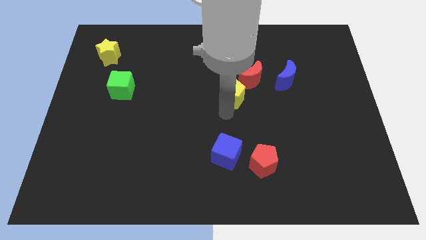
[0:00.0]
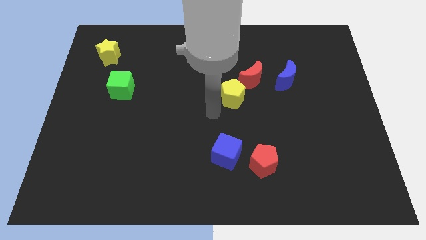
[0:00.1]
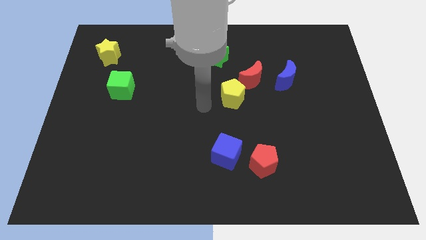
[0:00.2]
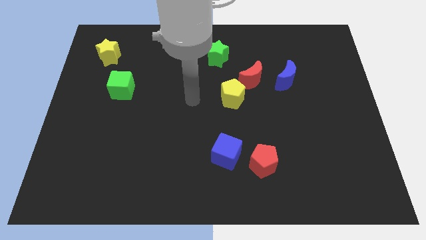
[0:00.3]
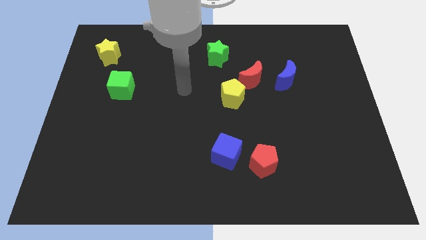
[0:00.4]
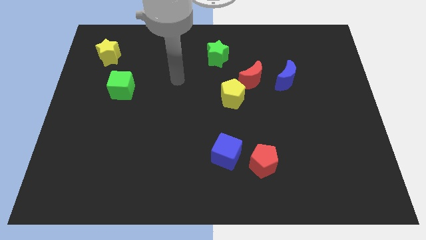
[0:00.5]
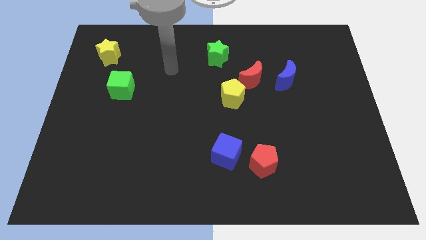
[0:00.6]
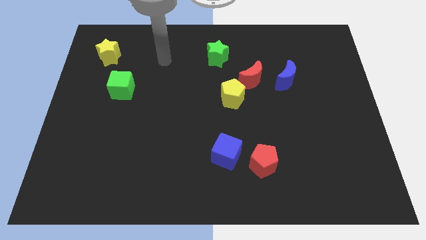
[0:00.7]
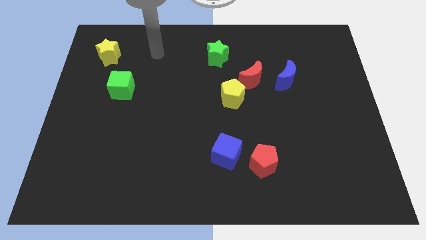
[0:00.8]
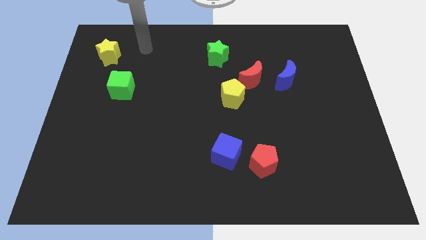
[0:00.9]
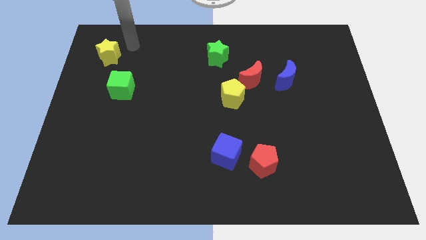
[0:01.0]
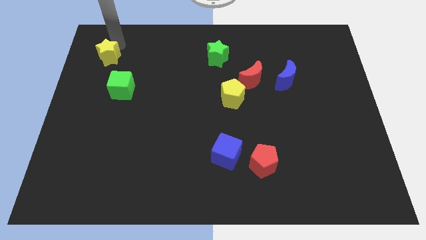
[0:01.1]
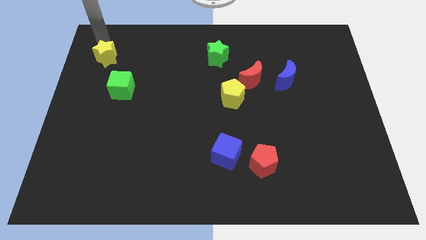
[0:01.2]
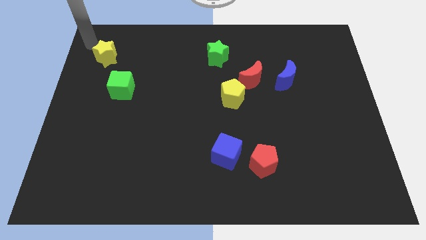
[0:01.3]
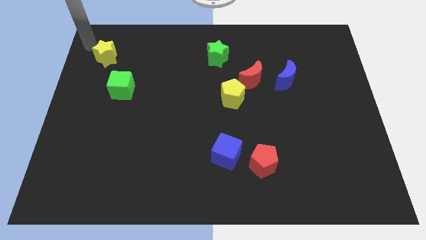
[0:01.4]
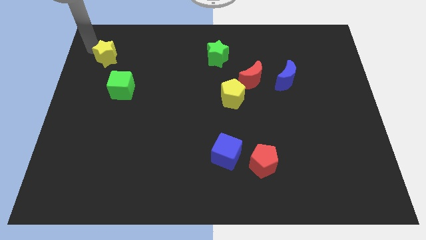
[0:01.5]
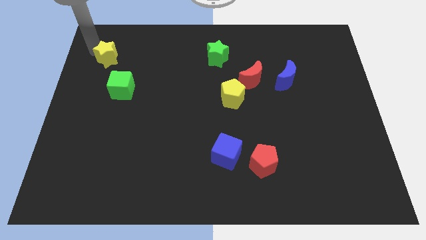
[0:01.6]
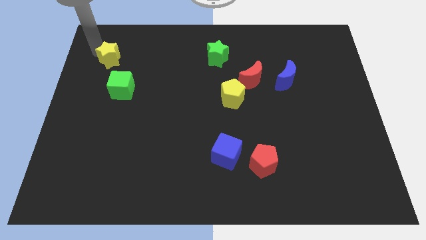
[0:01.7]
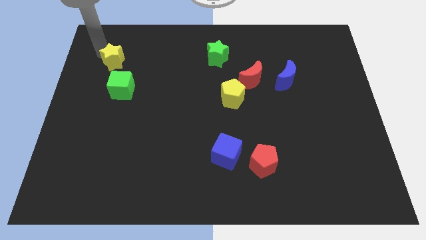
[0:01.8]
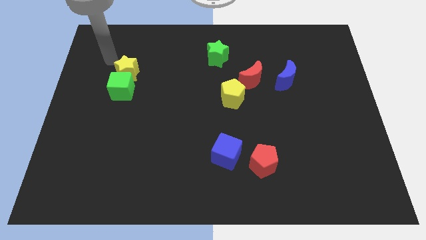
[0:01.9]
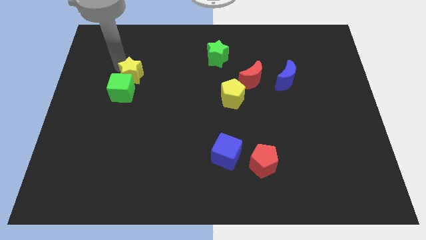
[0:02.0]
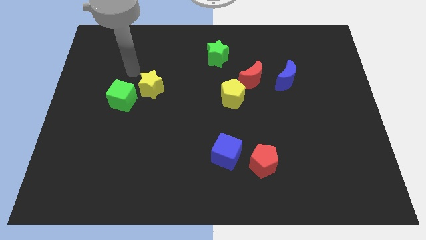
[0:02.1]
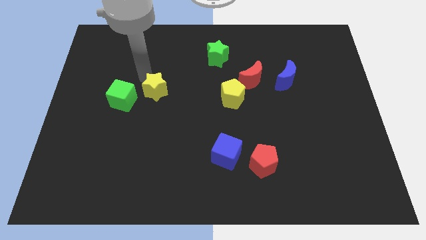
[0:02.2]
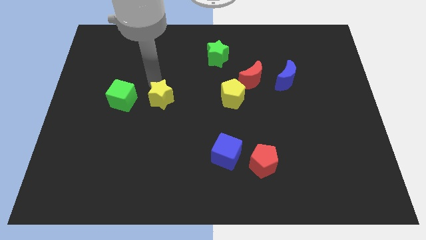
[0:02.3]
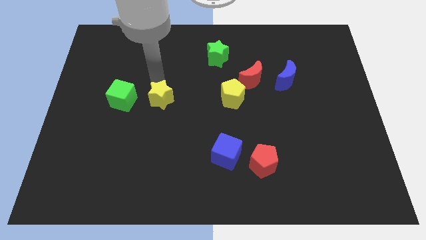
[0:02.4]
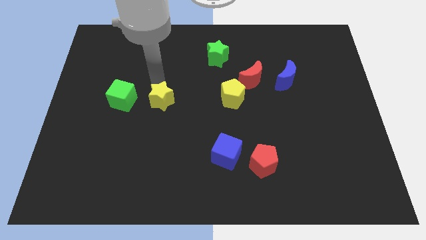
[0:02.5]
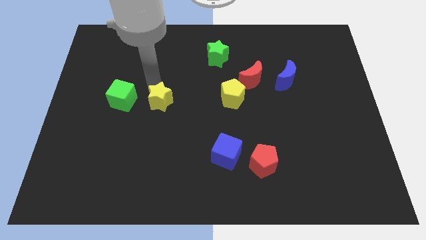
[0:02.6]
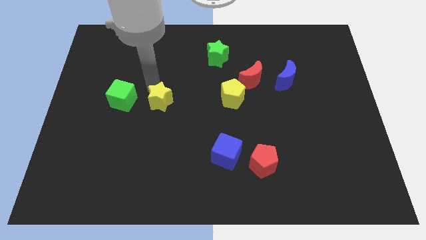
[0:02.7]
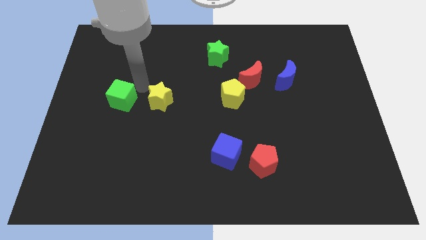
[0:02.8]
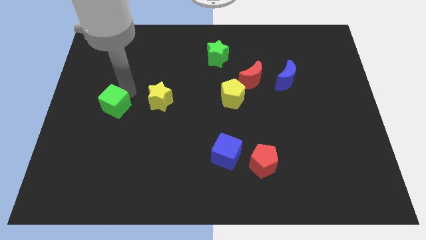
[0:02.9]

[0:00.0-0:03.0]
put the yellow star in between the yellow pentagon and green cube

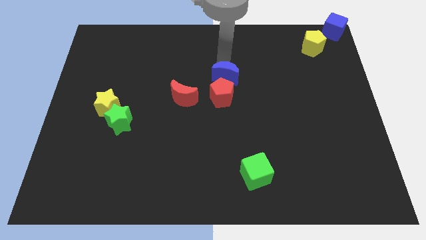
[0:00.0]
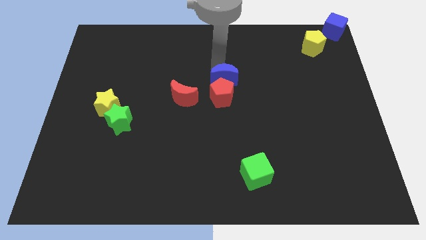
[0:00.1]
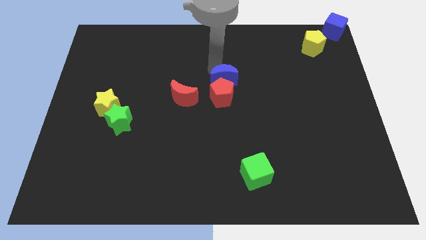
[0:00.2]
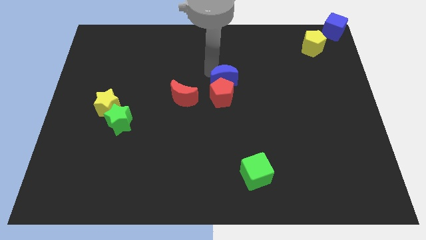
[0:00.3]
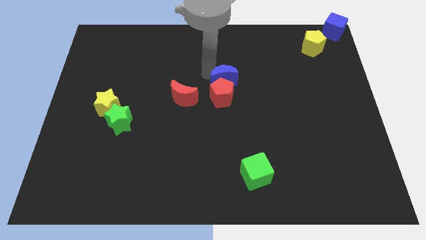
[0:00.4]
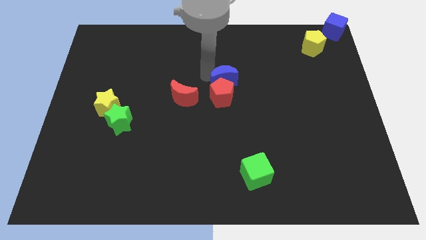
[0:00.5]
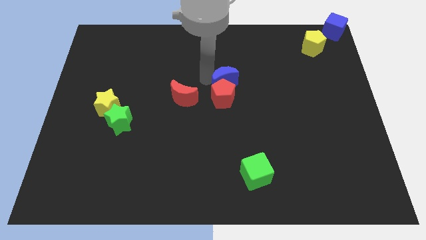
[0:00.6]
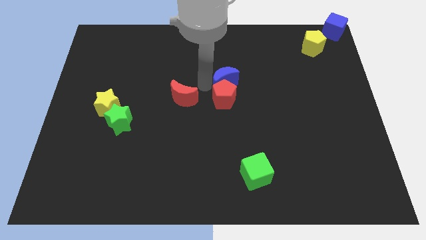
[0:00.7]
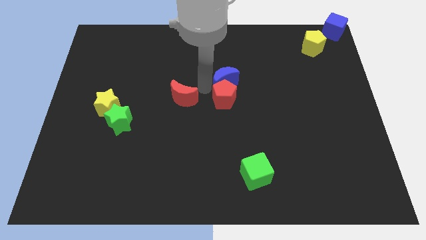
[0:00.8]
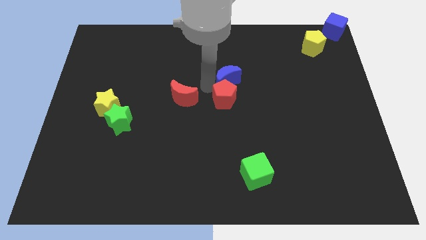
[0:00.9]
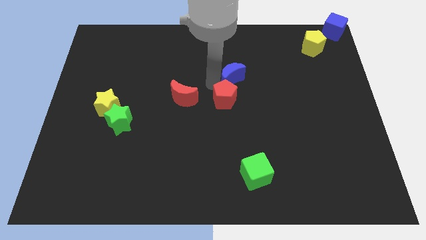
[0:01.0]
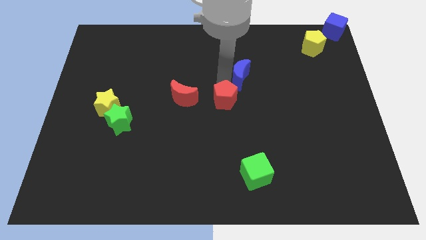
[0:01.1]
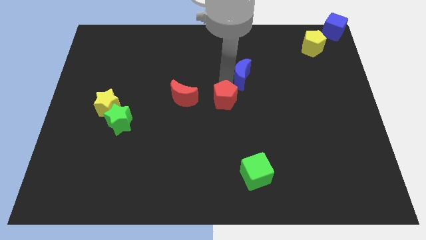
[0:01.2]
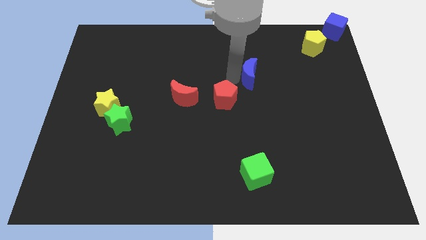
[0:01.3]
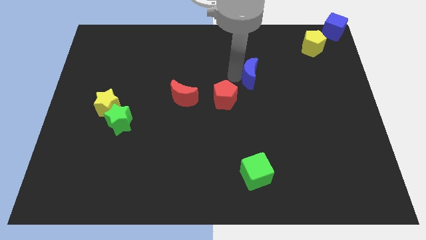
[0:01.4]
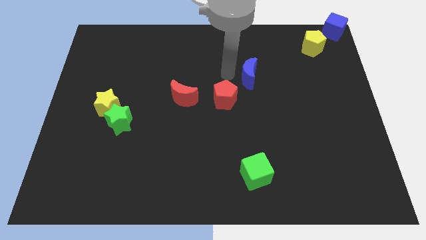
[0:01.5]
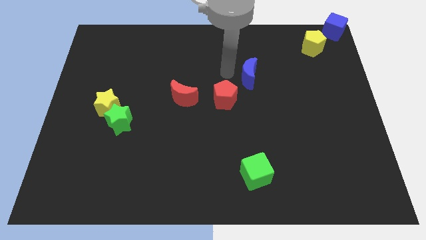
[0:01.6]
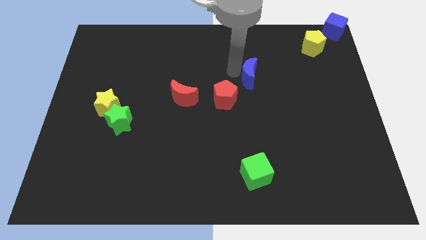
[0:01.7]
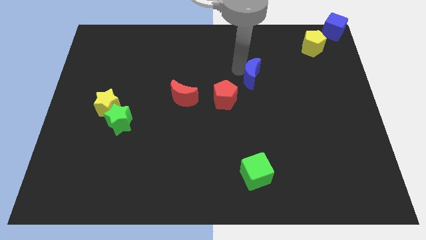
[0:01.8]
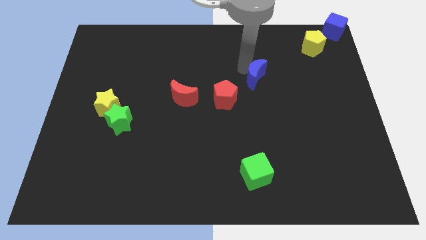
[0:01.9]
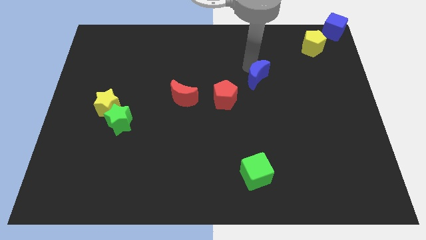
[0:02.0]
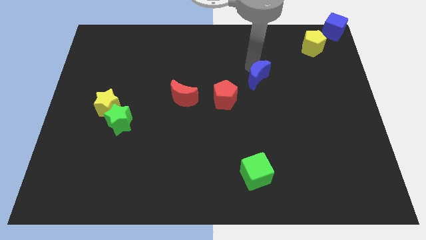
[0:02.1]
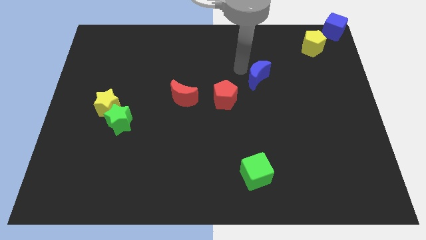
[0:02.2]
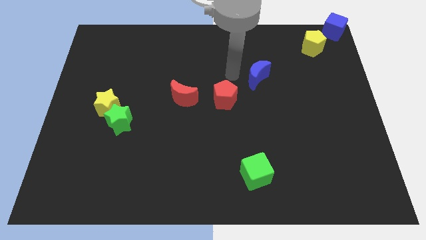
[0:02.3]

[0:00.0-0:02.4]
separate the blue moon from the red pentagon

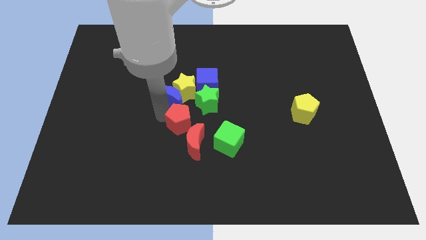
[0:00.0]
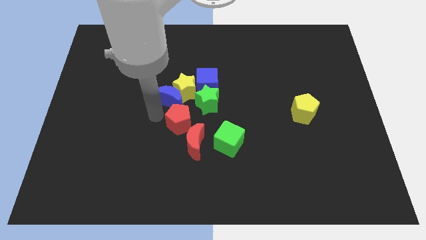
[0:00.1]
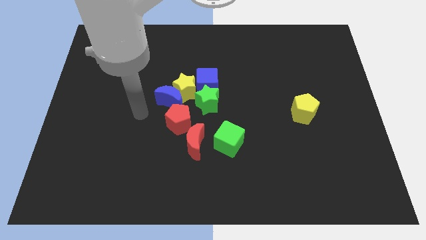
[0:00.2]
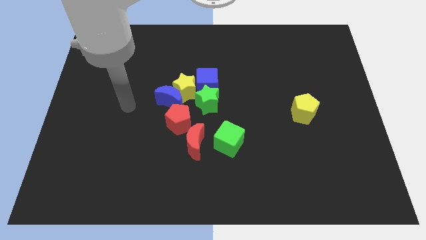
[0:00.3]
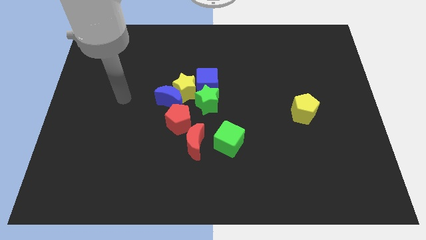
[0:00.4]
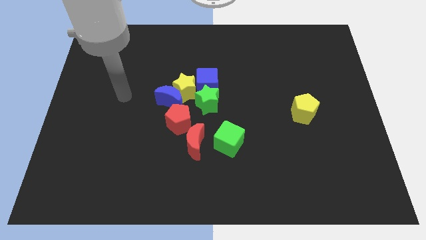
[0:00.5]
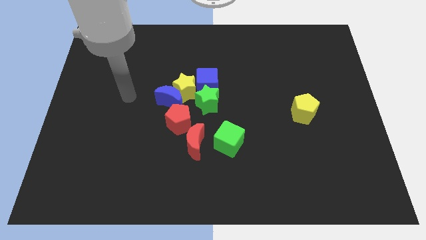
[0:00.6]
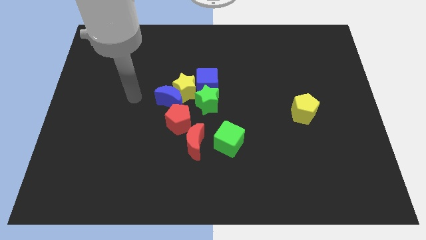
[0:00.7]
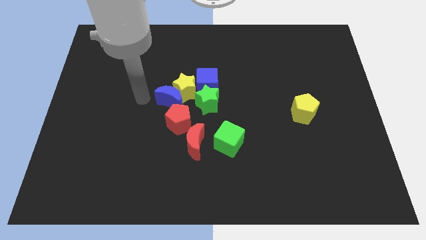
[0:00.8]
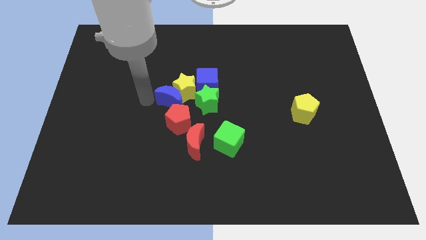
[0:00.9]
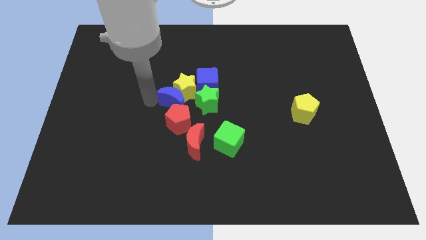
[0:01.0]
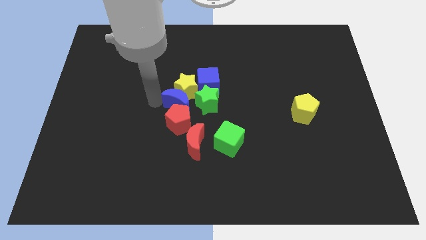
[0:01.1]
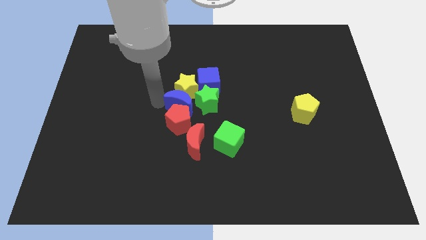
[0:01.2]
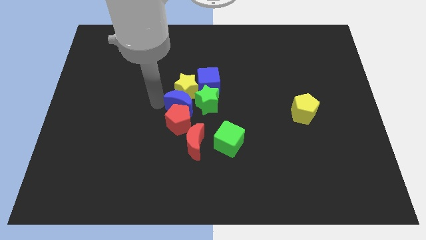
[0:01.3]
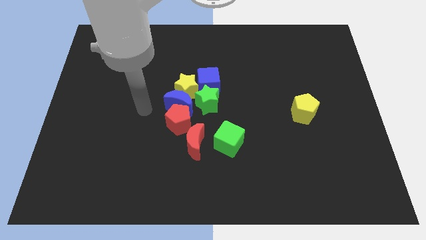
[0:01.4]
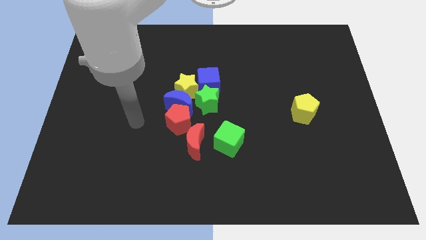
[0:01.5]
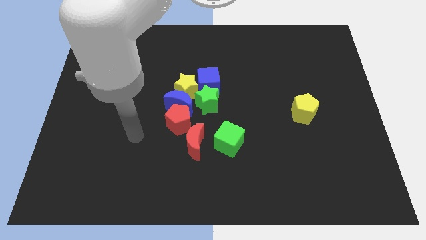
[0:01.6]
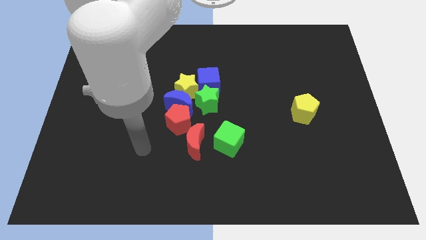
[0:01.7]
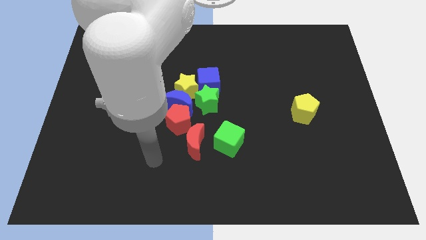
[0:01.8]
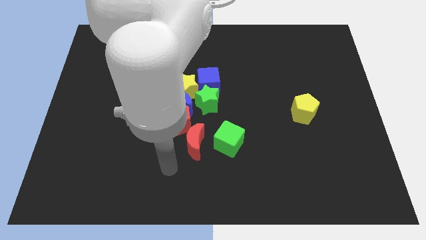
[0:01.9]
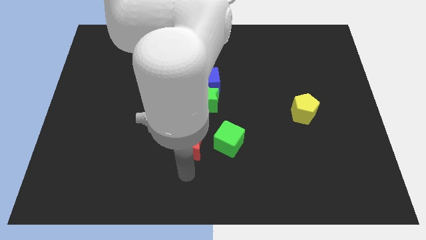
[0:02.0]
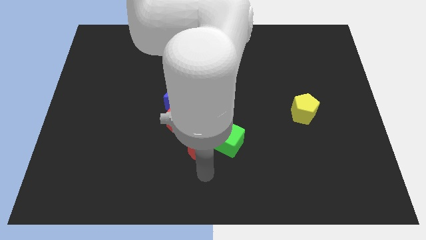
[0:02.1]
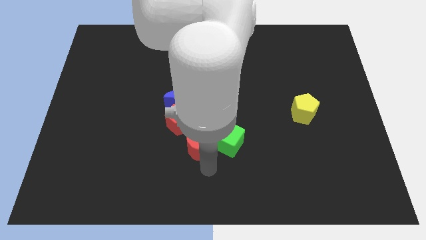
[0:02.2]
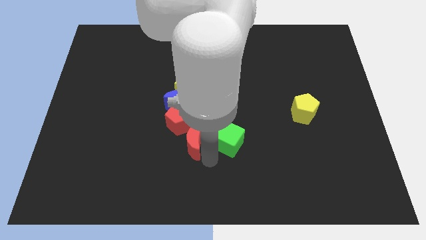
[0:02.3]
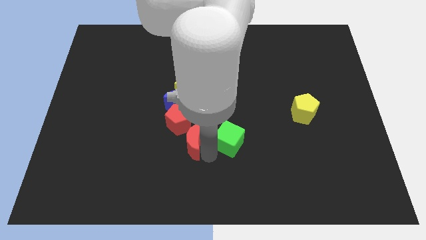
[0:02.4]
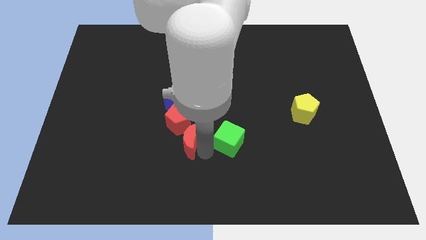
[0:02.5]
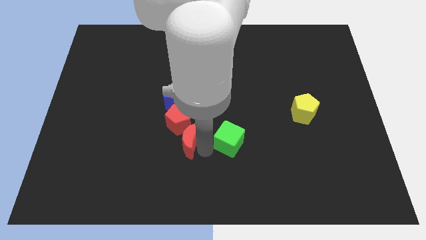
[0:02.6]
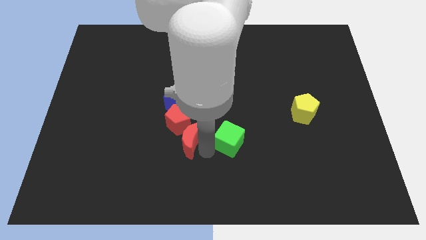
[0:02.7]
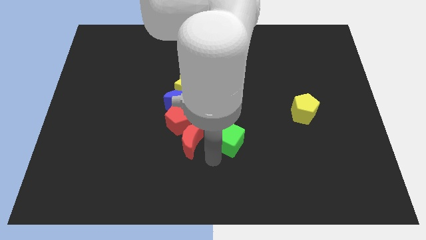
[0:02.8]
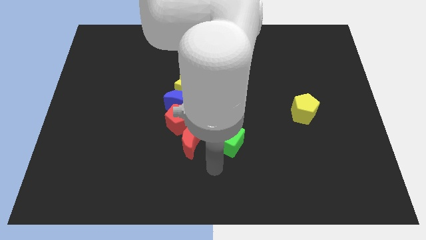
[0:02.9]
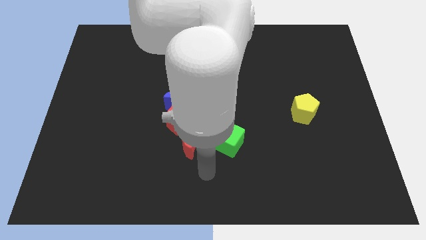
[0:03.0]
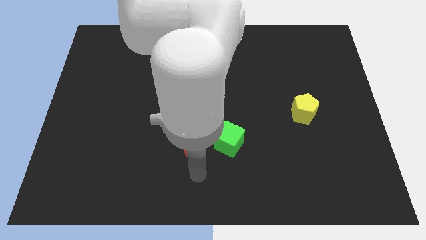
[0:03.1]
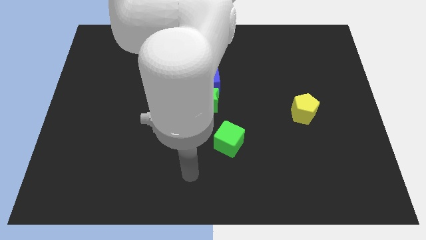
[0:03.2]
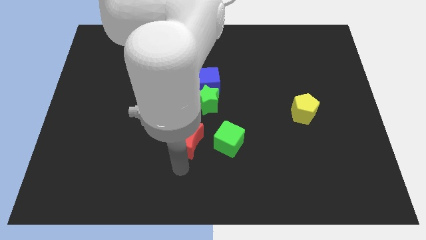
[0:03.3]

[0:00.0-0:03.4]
move your arm away from the red pentagon

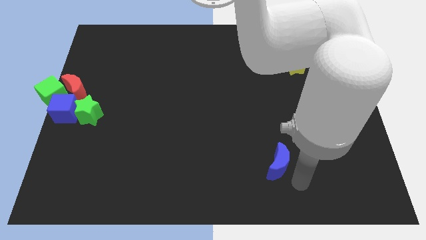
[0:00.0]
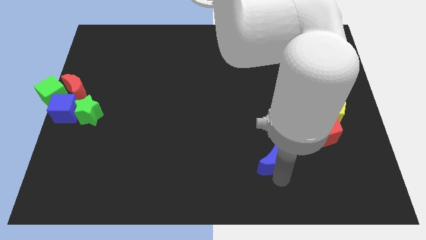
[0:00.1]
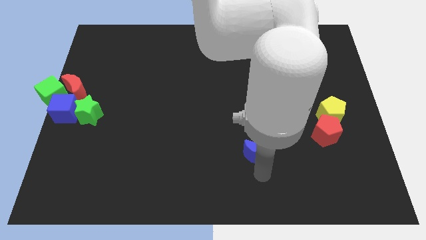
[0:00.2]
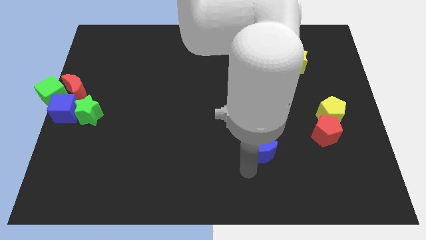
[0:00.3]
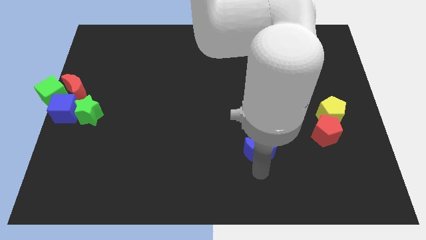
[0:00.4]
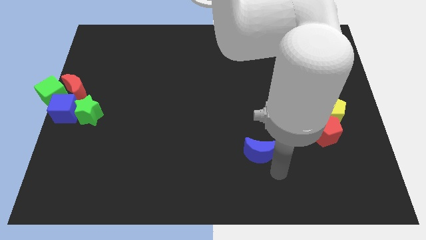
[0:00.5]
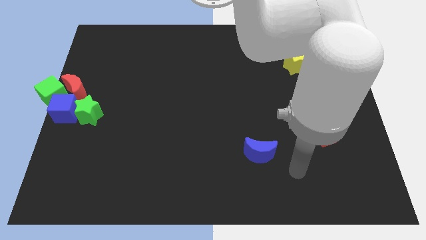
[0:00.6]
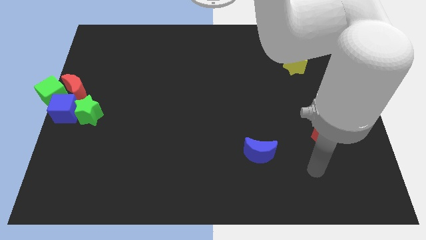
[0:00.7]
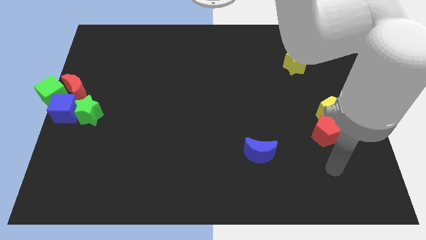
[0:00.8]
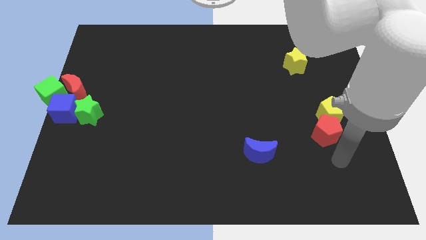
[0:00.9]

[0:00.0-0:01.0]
place the blue moon left to the red pentagon
